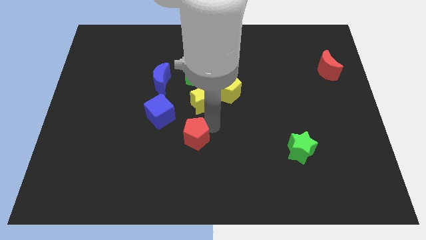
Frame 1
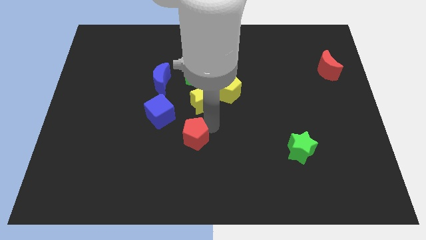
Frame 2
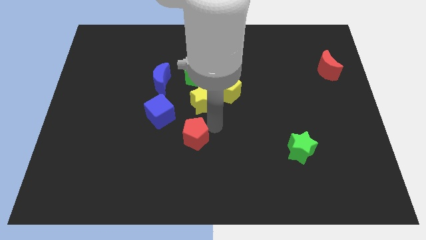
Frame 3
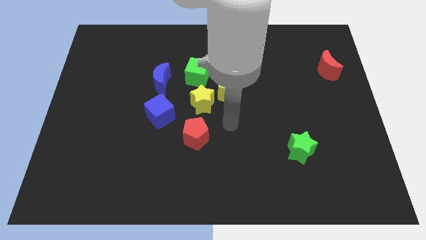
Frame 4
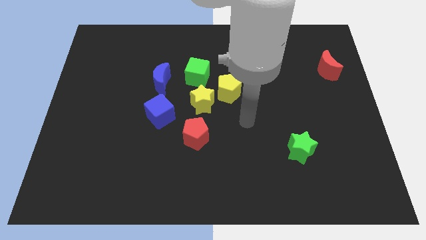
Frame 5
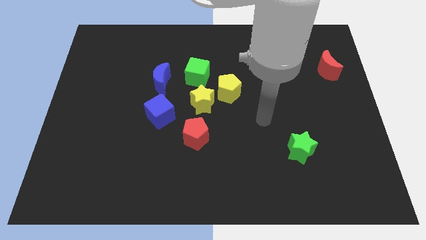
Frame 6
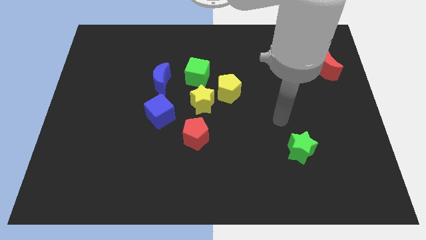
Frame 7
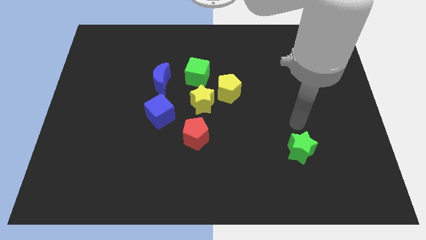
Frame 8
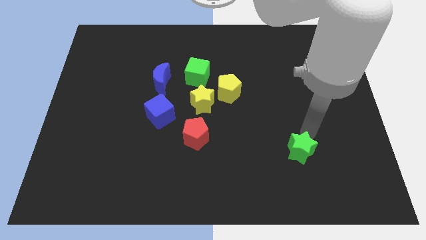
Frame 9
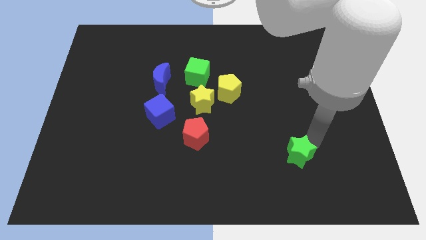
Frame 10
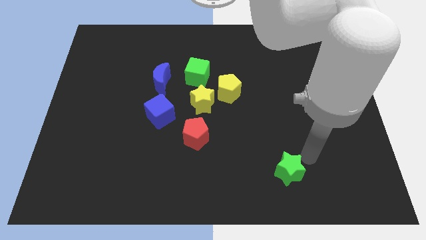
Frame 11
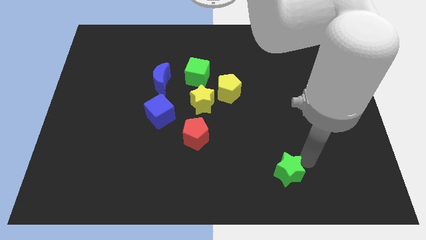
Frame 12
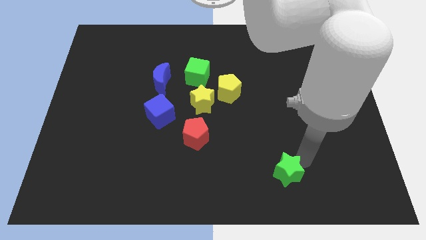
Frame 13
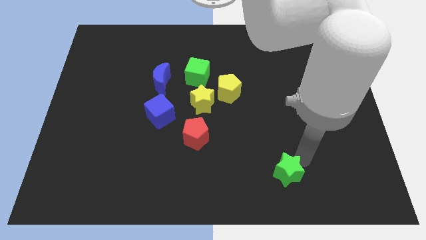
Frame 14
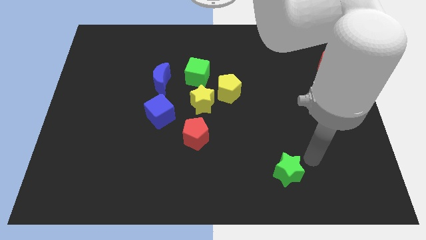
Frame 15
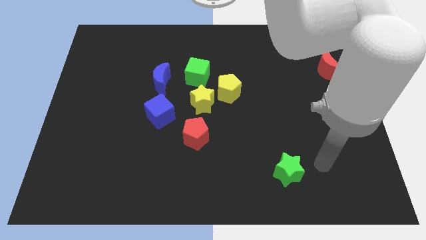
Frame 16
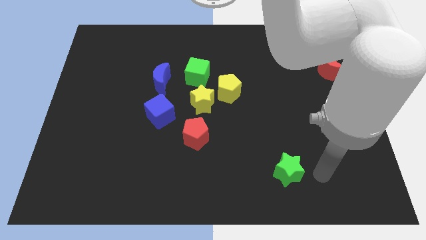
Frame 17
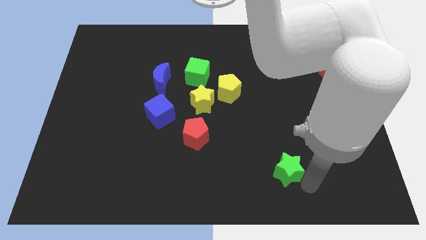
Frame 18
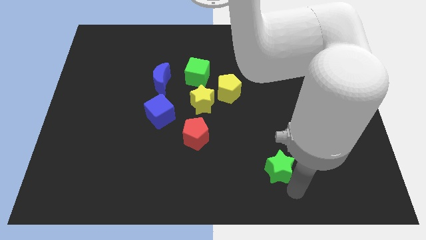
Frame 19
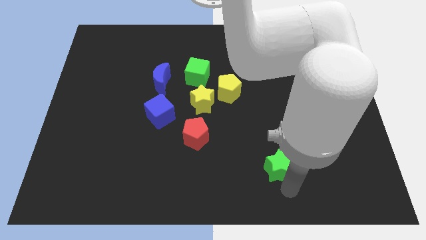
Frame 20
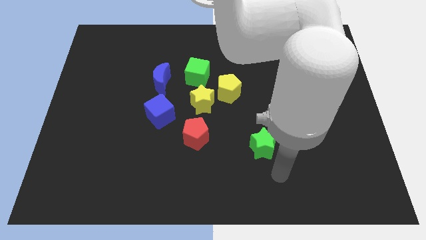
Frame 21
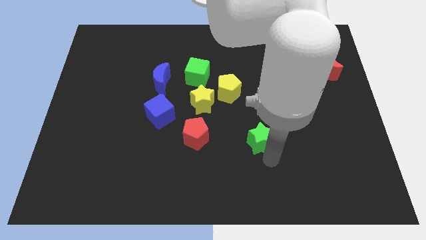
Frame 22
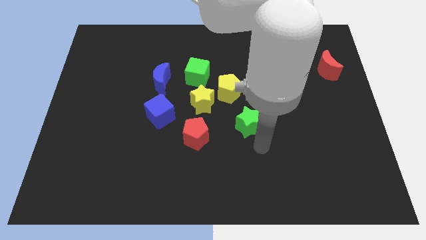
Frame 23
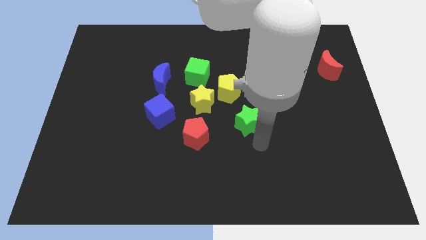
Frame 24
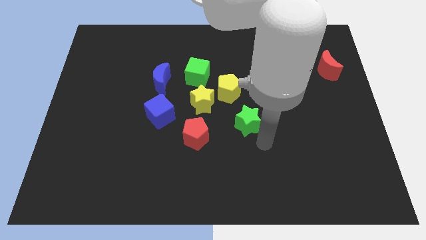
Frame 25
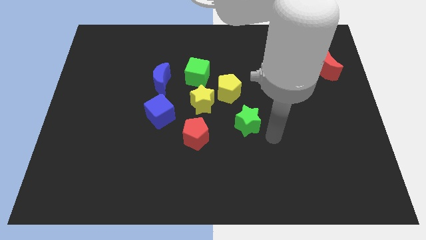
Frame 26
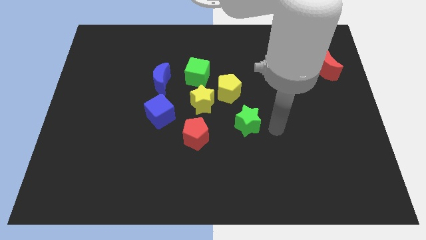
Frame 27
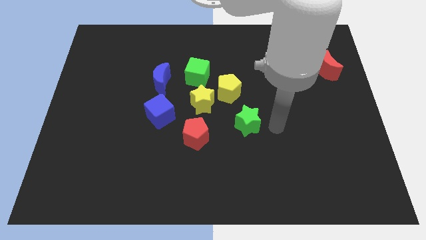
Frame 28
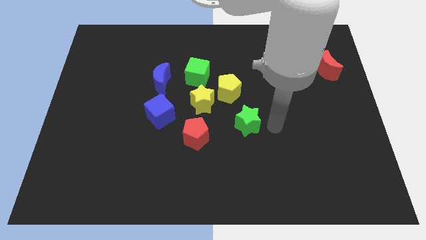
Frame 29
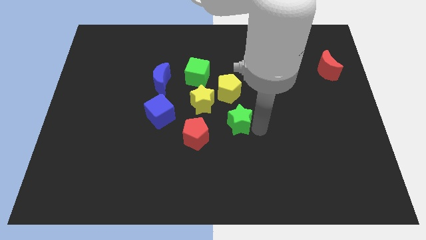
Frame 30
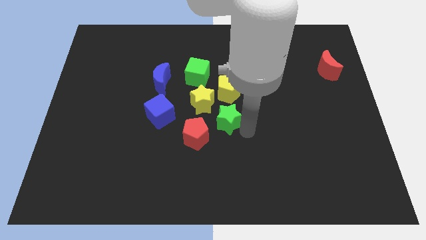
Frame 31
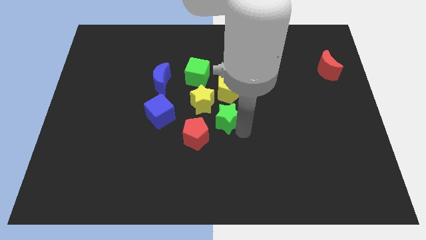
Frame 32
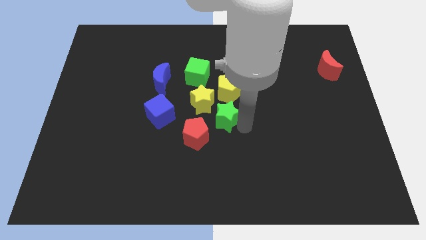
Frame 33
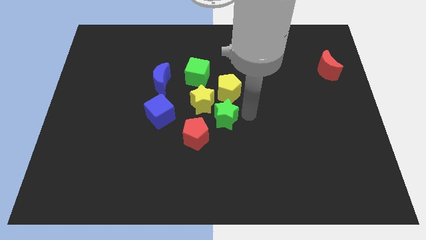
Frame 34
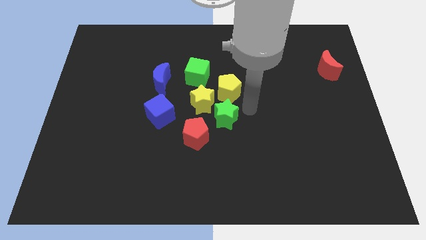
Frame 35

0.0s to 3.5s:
push green star vertically below yellow pentagon

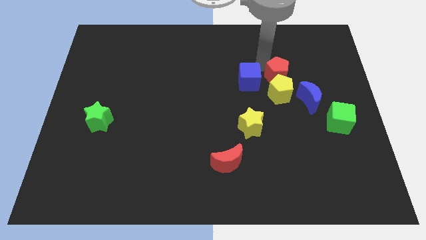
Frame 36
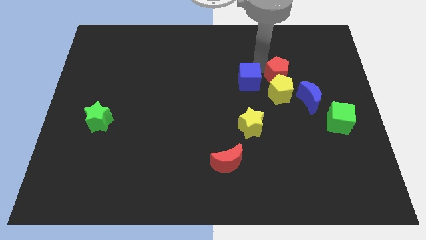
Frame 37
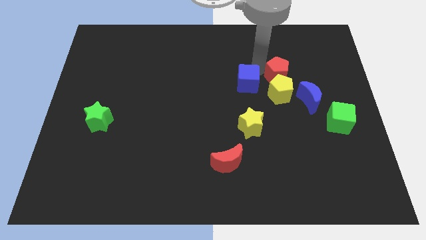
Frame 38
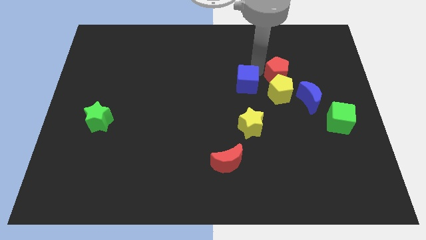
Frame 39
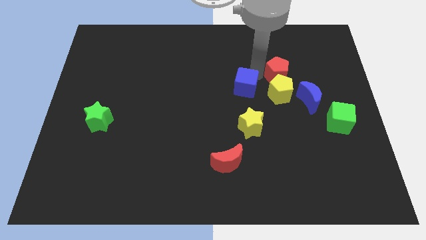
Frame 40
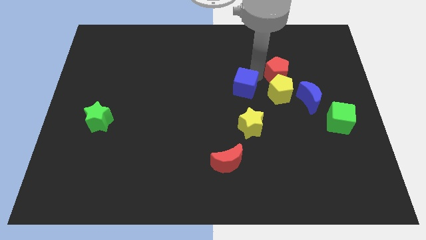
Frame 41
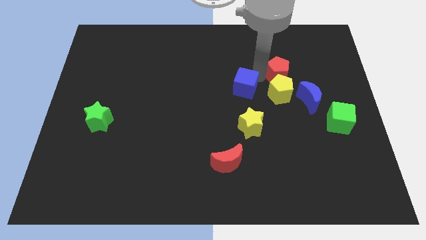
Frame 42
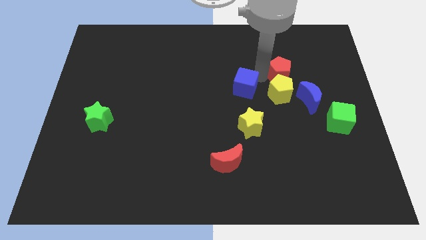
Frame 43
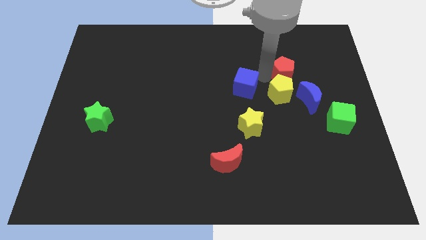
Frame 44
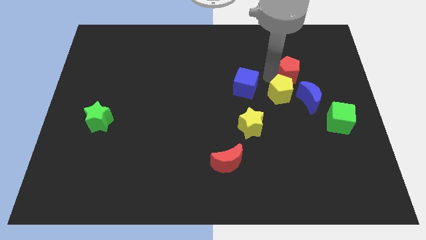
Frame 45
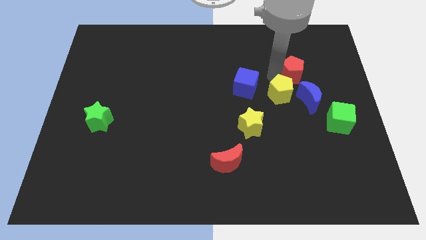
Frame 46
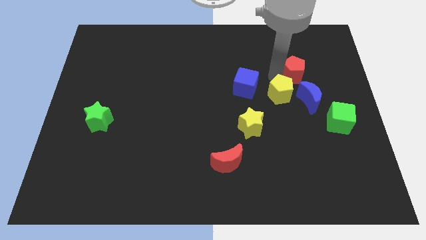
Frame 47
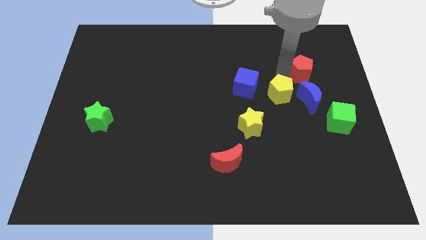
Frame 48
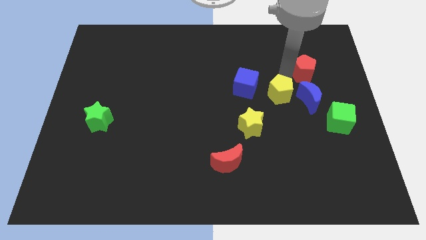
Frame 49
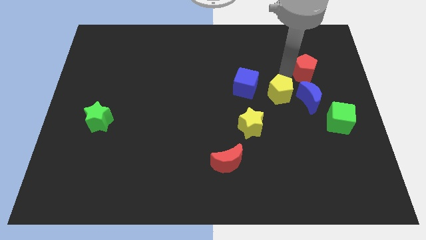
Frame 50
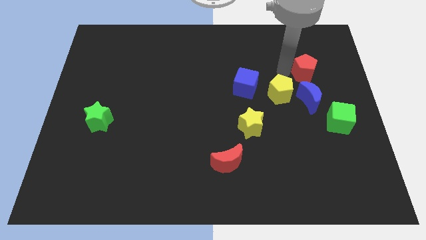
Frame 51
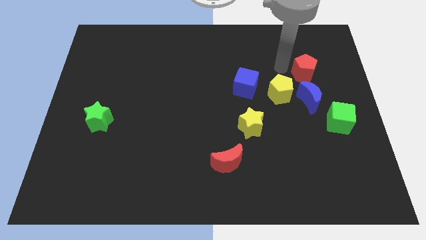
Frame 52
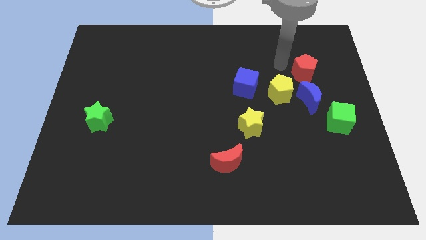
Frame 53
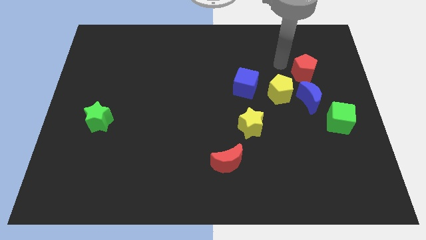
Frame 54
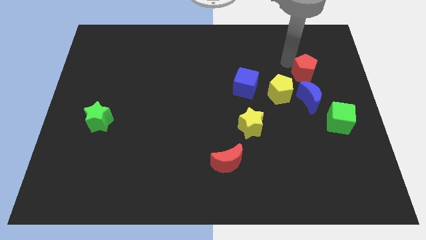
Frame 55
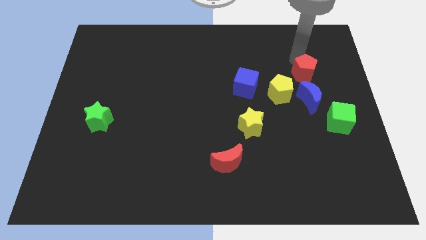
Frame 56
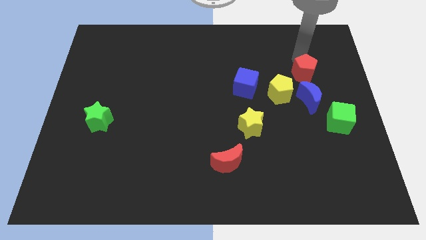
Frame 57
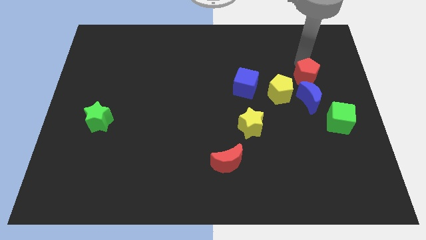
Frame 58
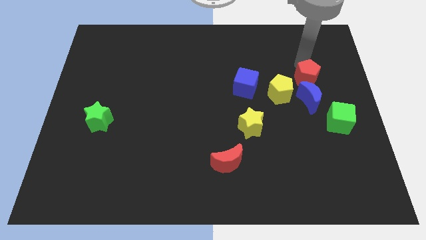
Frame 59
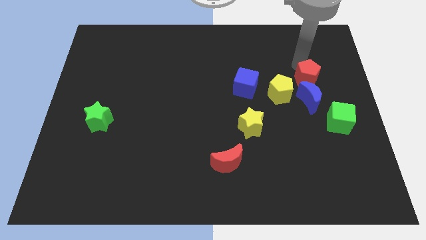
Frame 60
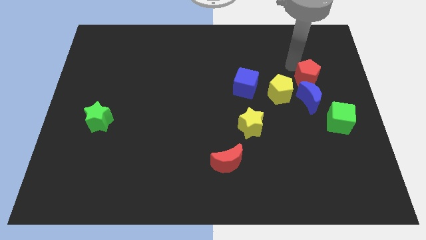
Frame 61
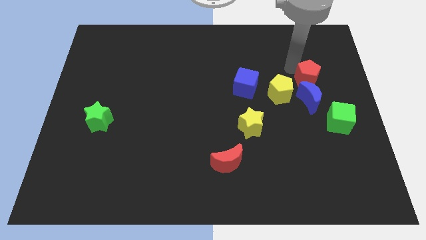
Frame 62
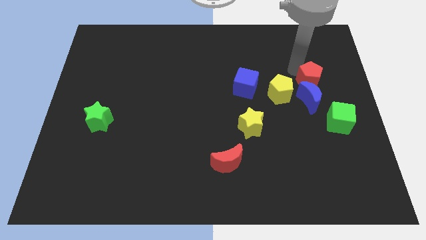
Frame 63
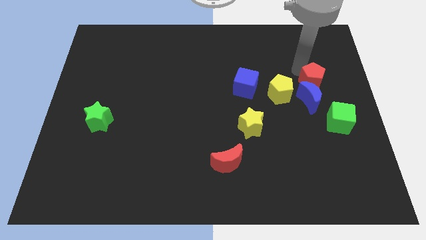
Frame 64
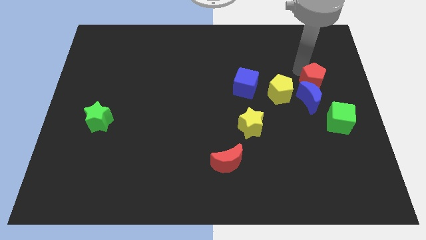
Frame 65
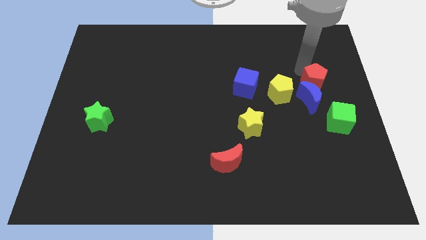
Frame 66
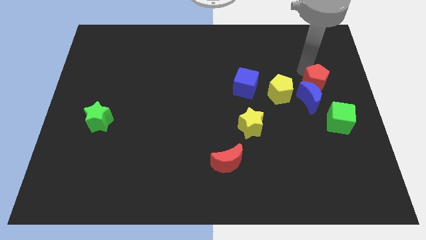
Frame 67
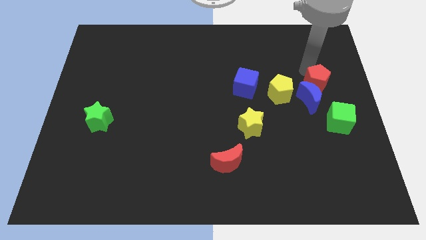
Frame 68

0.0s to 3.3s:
put the red pentagon and the blue crescent together

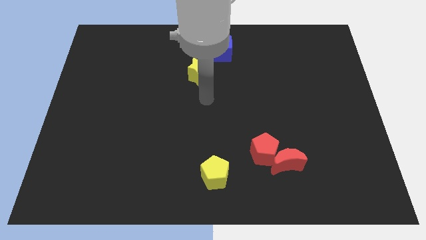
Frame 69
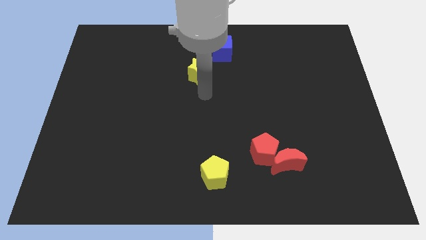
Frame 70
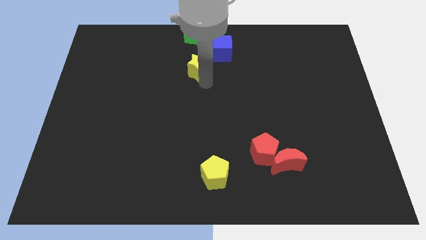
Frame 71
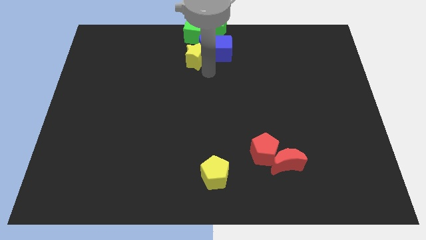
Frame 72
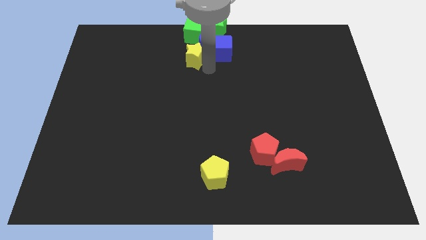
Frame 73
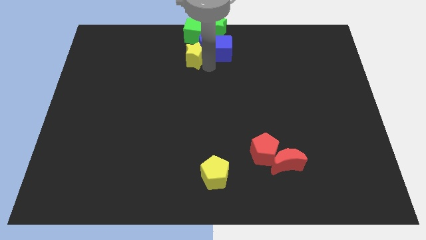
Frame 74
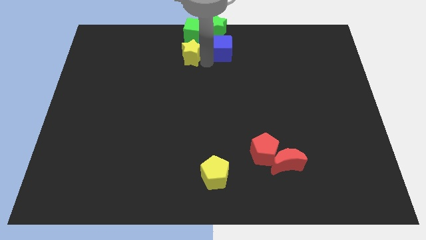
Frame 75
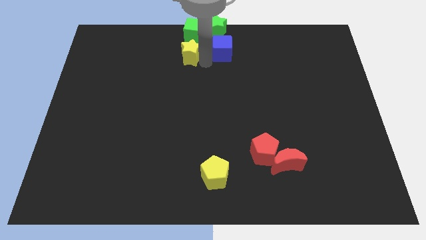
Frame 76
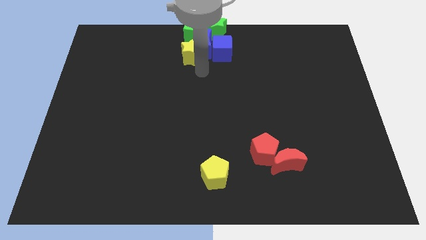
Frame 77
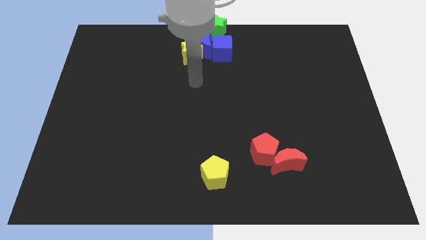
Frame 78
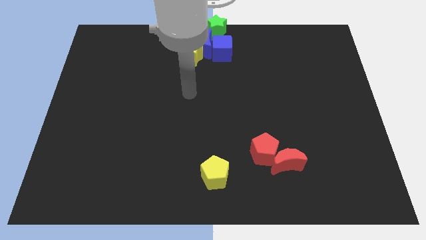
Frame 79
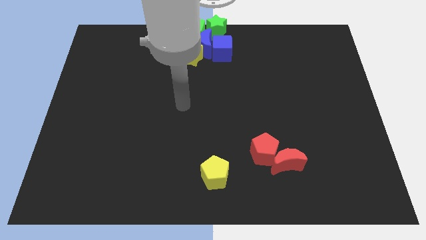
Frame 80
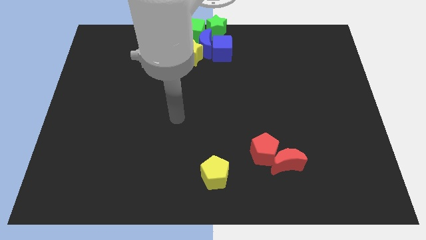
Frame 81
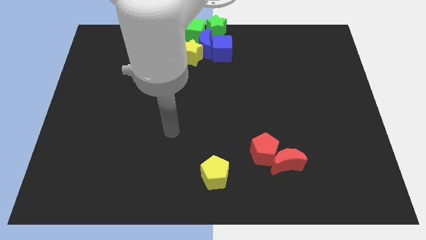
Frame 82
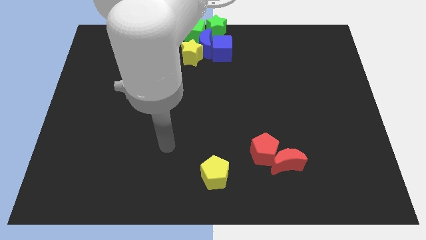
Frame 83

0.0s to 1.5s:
drag your arm to the center

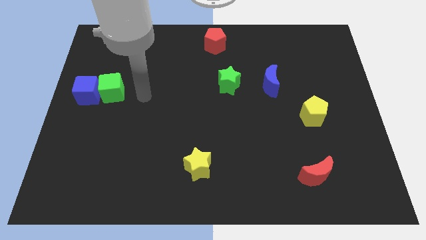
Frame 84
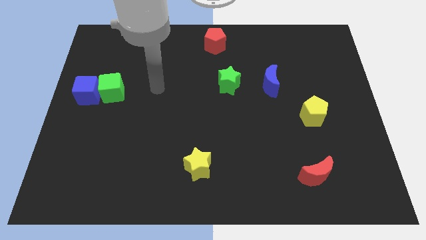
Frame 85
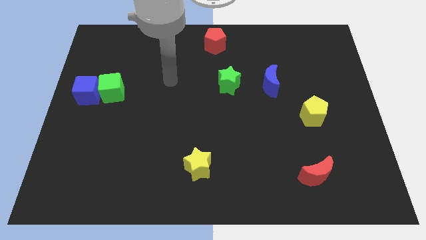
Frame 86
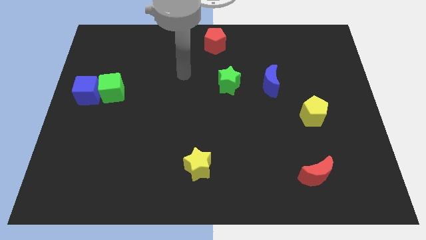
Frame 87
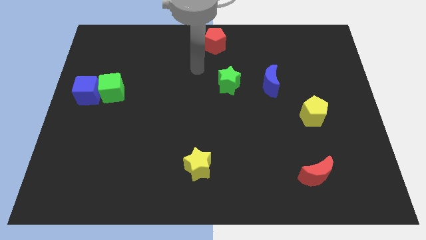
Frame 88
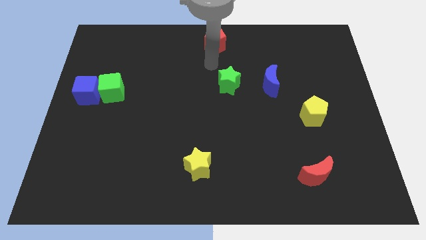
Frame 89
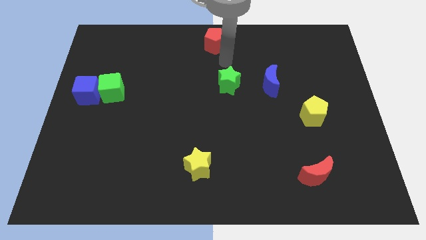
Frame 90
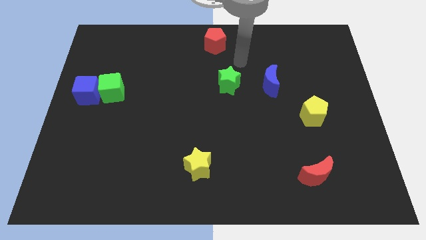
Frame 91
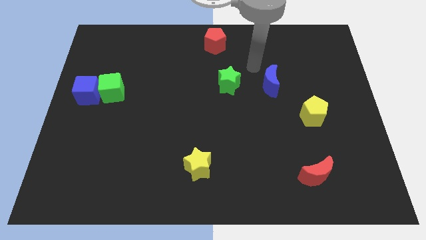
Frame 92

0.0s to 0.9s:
point your arm near the blue crescent
